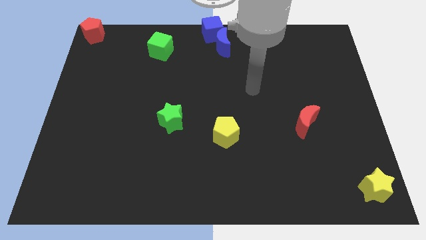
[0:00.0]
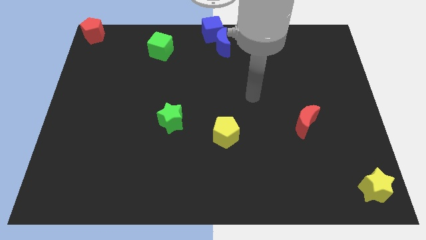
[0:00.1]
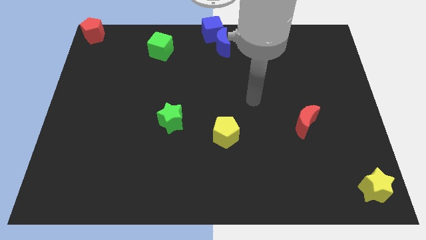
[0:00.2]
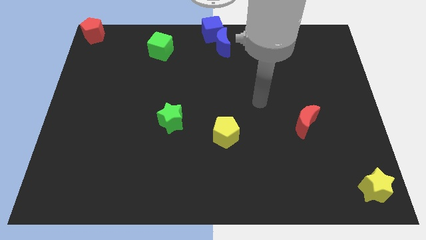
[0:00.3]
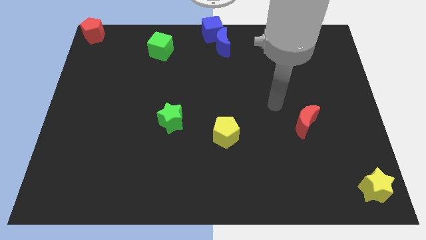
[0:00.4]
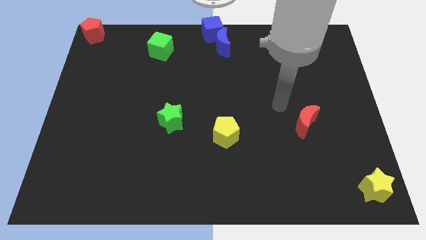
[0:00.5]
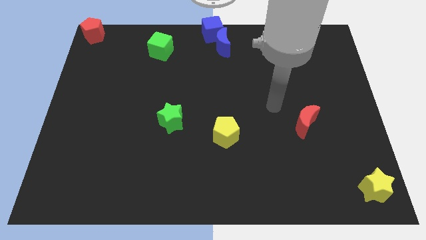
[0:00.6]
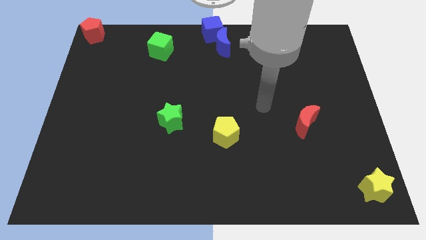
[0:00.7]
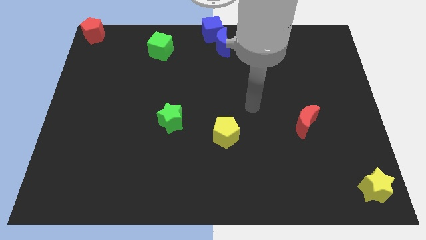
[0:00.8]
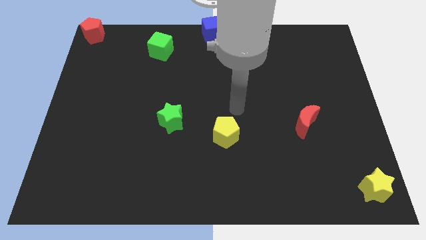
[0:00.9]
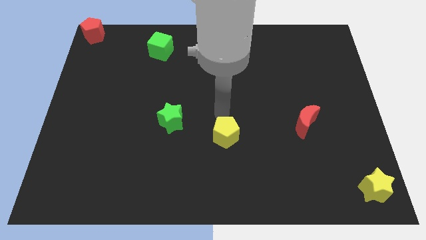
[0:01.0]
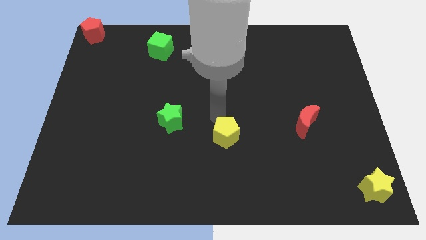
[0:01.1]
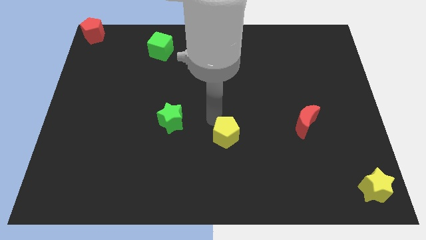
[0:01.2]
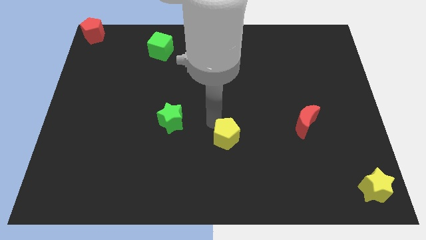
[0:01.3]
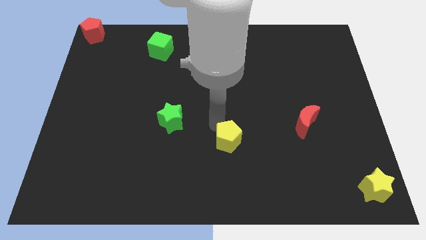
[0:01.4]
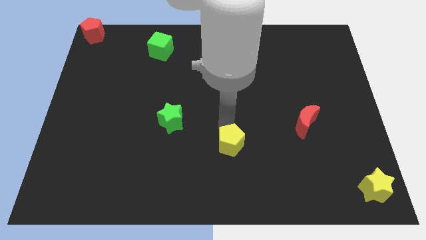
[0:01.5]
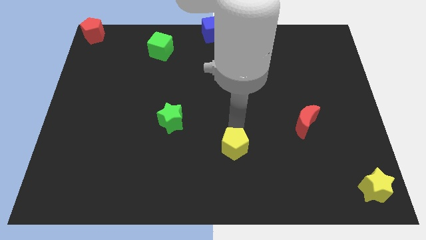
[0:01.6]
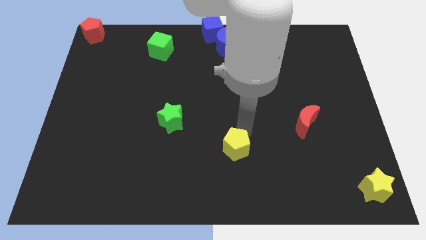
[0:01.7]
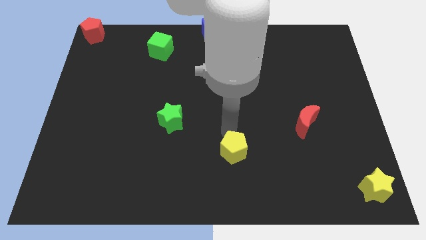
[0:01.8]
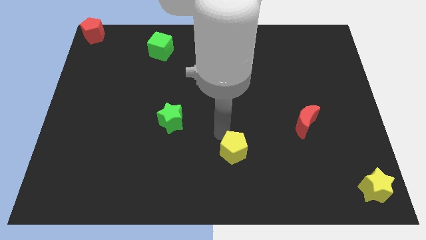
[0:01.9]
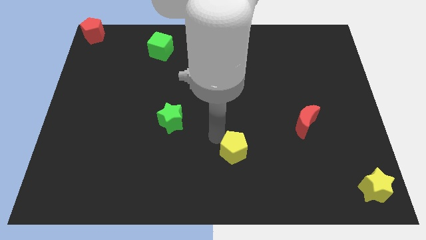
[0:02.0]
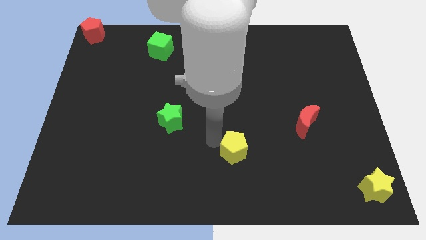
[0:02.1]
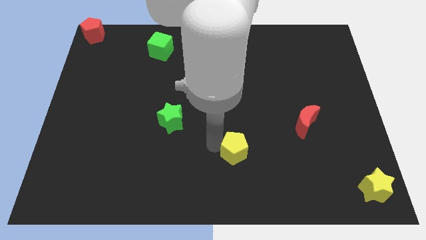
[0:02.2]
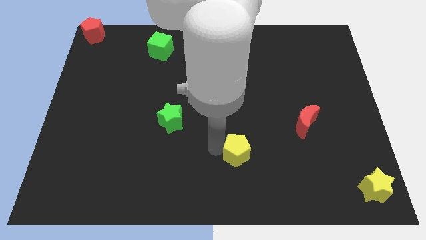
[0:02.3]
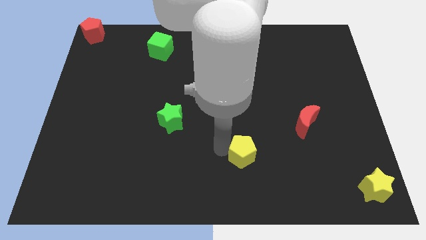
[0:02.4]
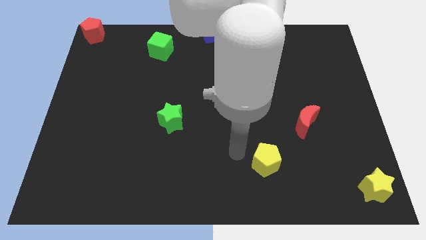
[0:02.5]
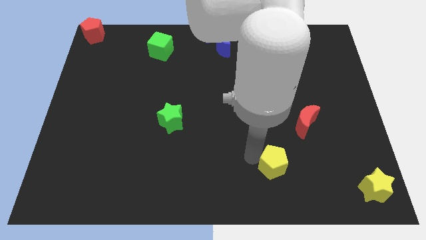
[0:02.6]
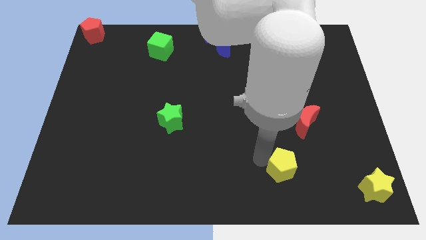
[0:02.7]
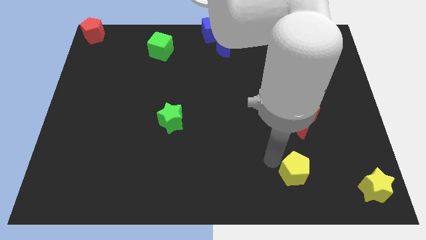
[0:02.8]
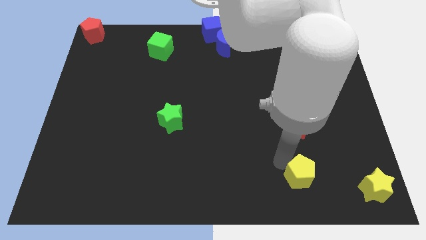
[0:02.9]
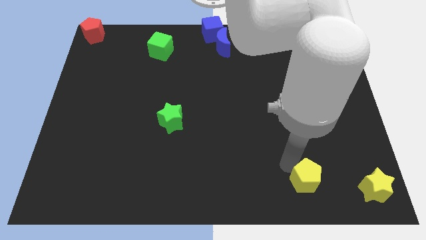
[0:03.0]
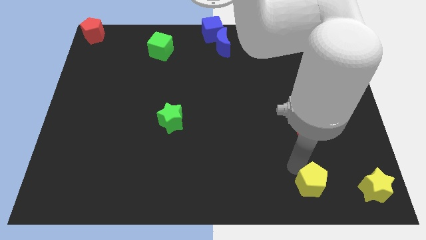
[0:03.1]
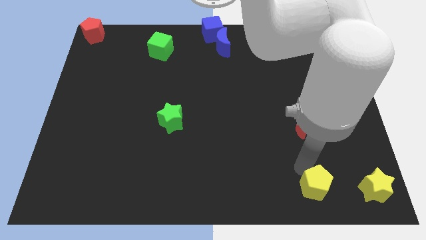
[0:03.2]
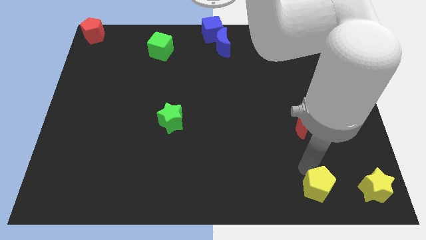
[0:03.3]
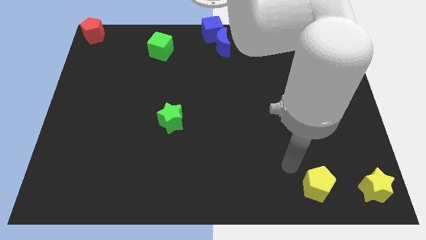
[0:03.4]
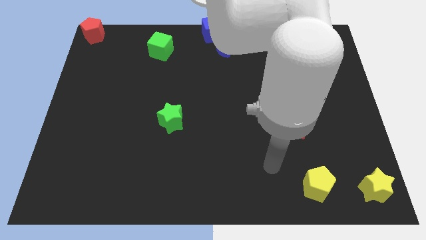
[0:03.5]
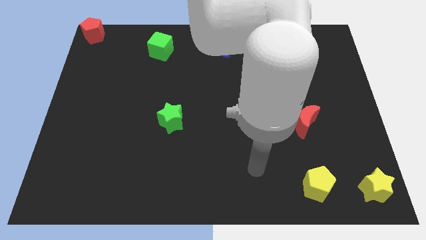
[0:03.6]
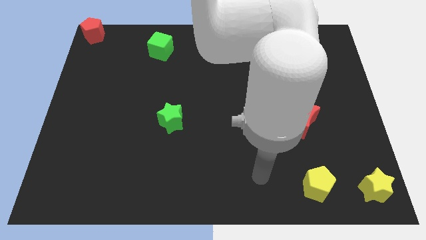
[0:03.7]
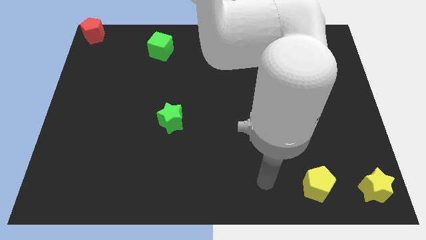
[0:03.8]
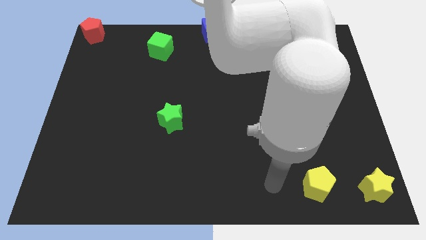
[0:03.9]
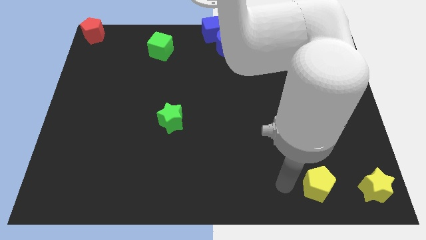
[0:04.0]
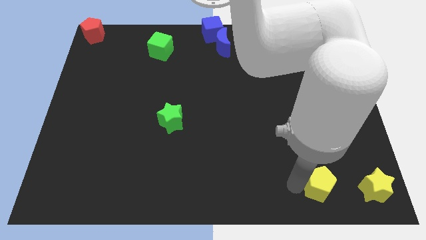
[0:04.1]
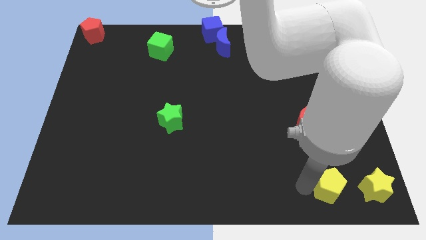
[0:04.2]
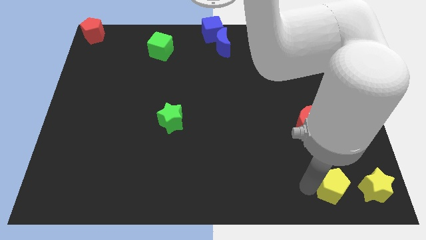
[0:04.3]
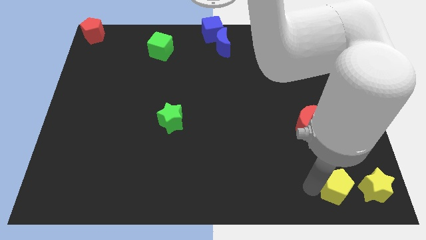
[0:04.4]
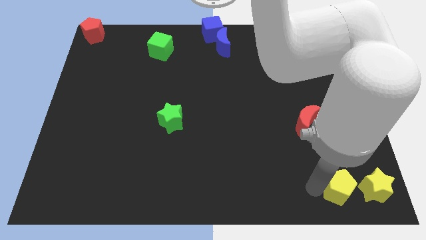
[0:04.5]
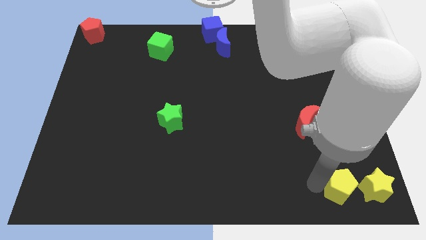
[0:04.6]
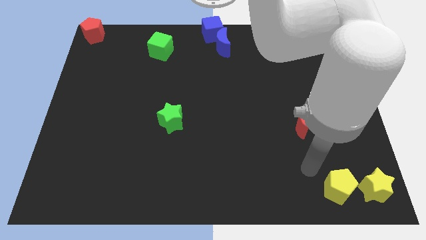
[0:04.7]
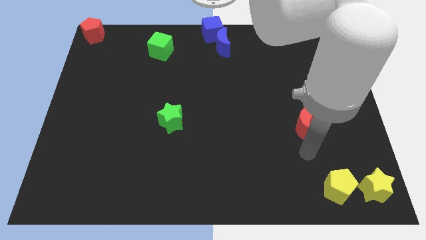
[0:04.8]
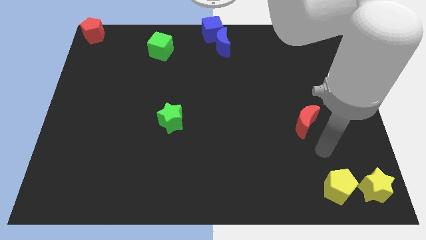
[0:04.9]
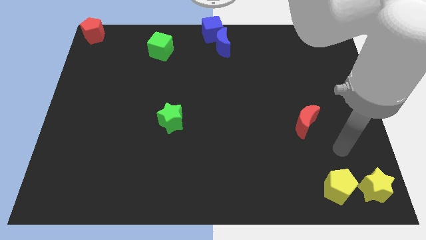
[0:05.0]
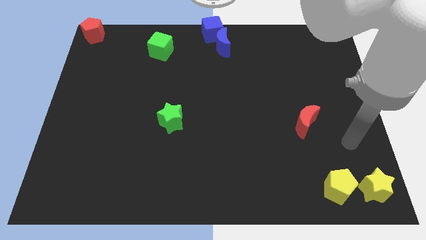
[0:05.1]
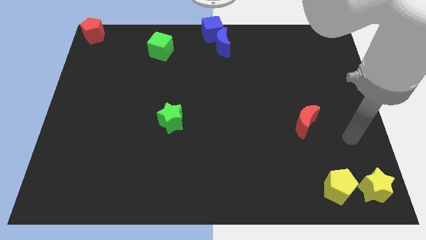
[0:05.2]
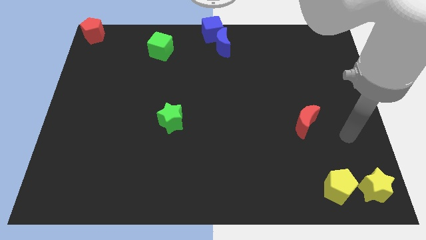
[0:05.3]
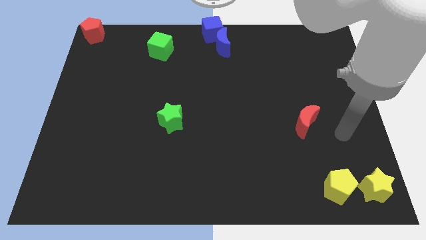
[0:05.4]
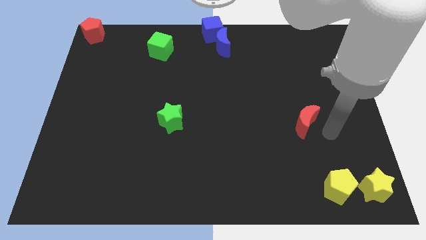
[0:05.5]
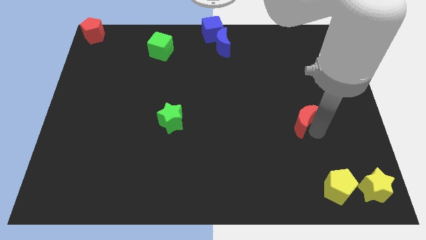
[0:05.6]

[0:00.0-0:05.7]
place yellow pentagon to the left side of the yellow star

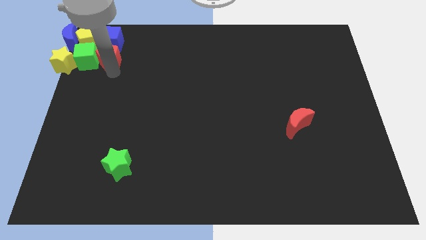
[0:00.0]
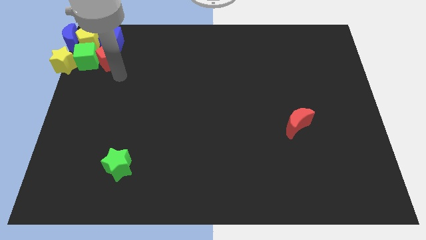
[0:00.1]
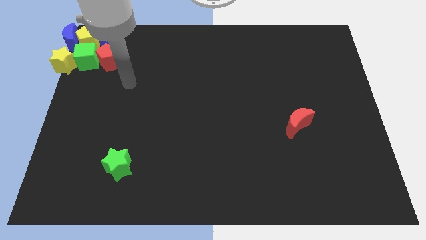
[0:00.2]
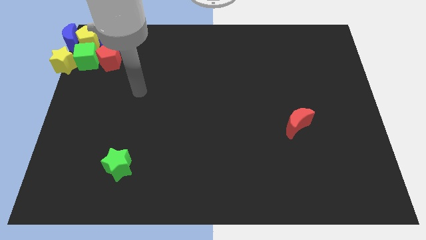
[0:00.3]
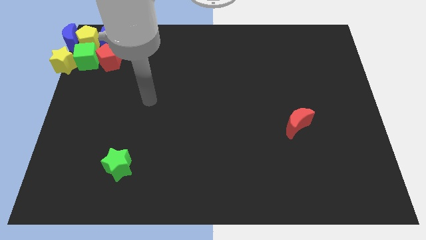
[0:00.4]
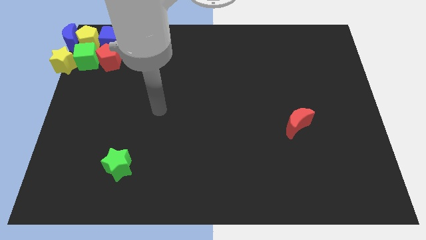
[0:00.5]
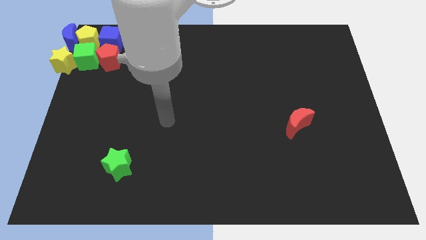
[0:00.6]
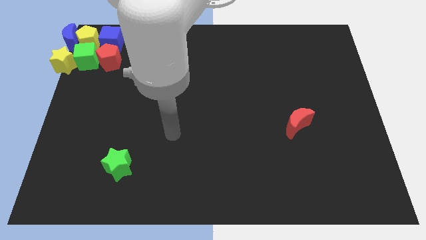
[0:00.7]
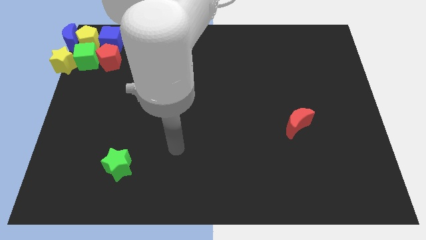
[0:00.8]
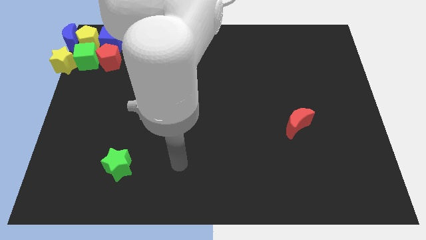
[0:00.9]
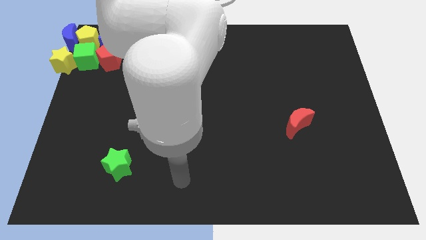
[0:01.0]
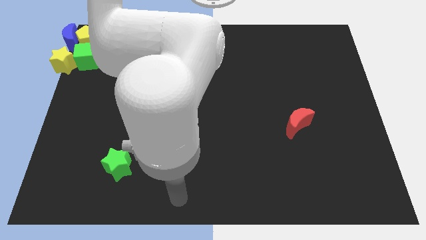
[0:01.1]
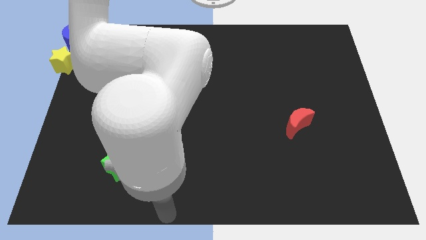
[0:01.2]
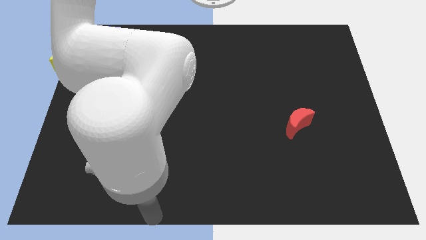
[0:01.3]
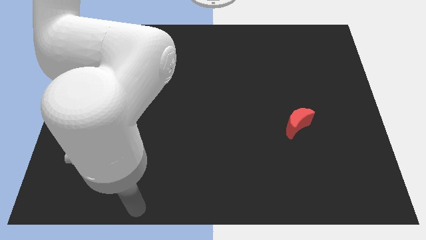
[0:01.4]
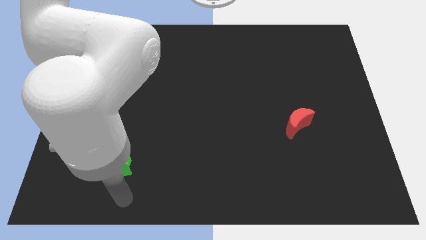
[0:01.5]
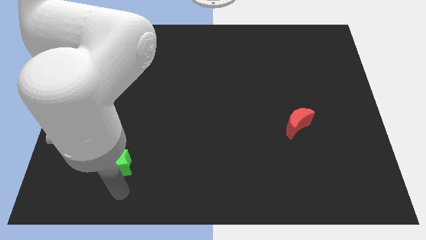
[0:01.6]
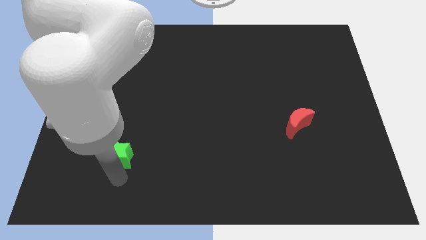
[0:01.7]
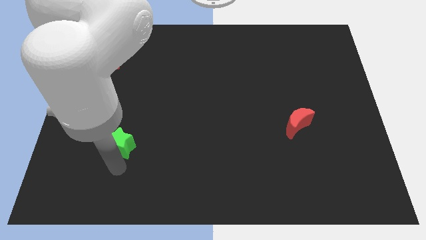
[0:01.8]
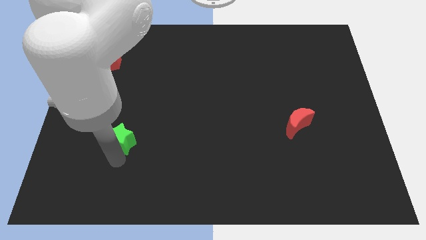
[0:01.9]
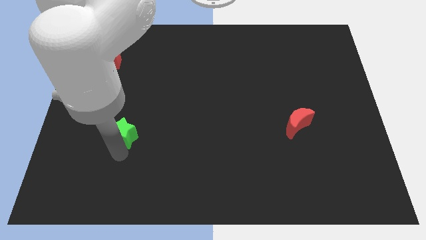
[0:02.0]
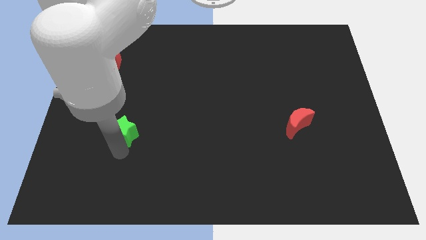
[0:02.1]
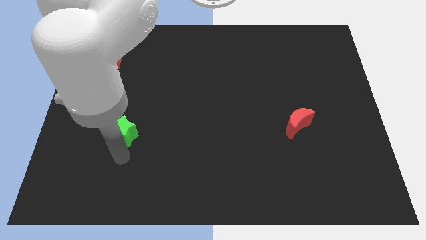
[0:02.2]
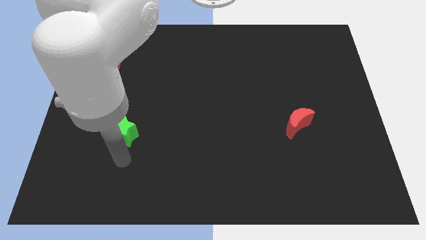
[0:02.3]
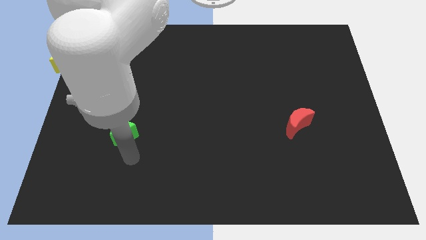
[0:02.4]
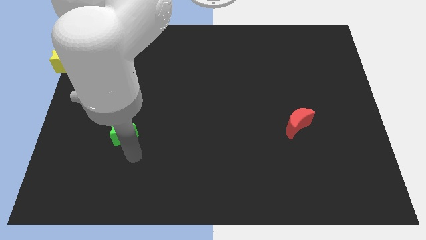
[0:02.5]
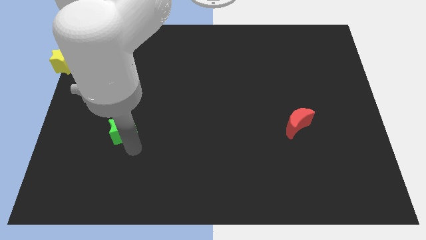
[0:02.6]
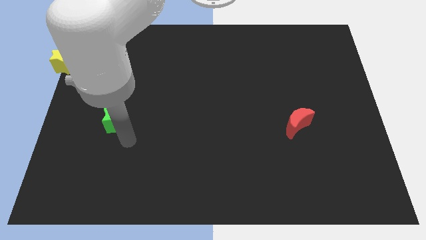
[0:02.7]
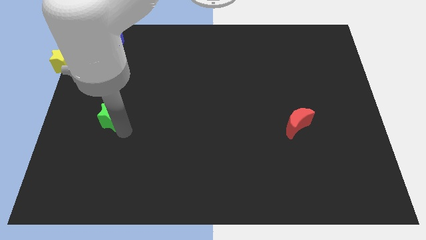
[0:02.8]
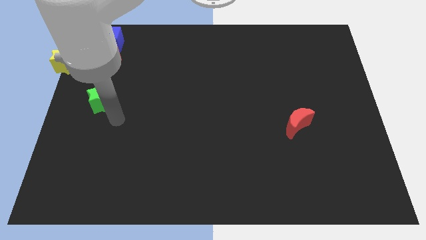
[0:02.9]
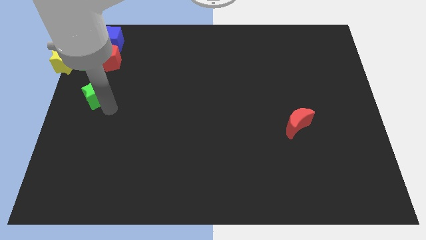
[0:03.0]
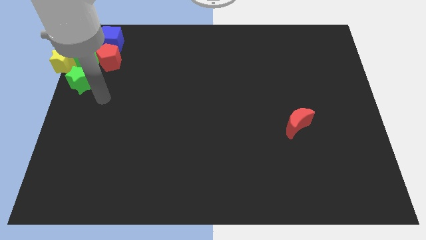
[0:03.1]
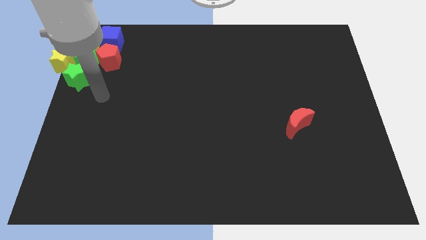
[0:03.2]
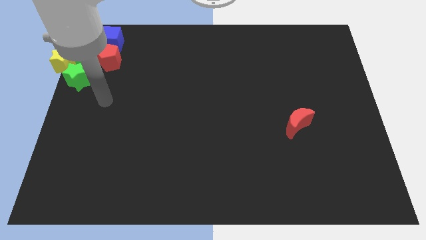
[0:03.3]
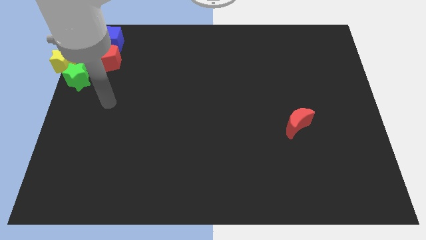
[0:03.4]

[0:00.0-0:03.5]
place the green star at the bottom of the green cube
